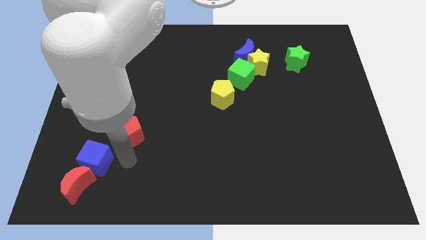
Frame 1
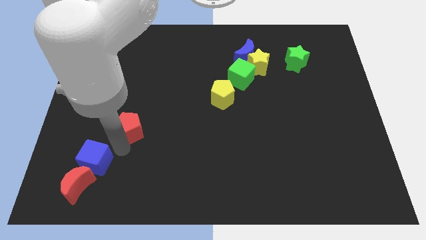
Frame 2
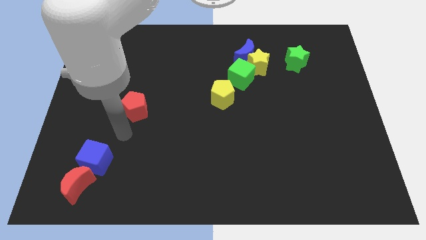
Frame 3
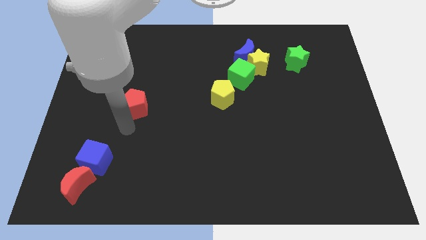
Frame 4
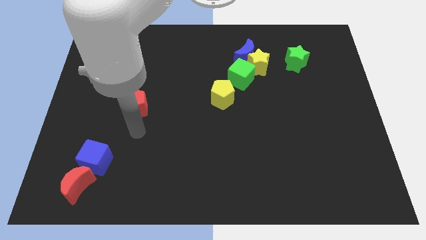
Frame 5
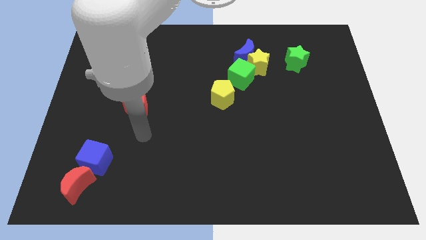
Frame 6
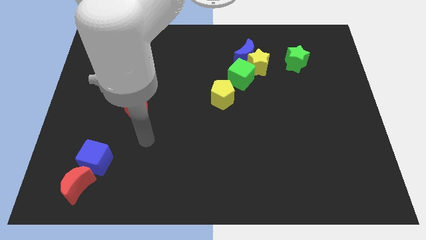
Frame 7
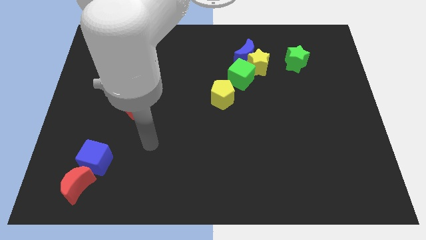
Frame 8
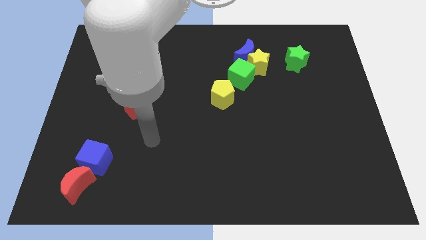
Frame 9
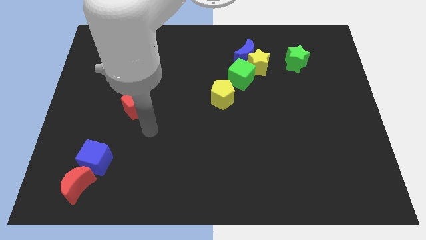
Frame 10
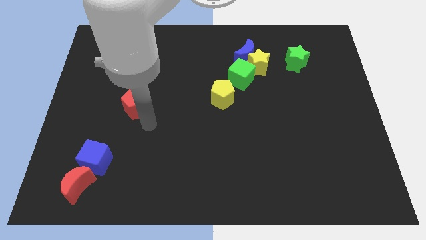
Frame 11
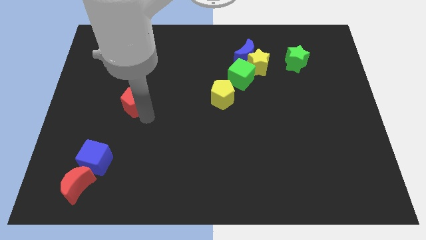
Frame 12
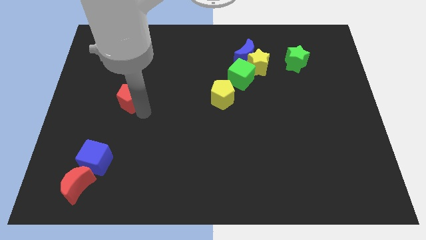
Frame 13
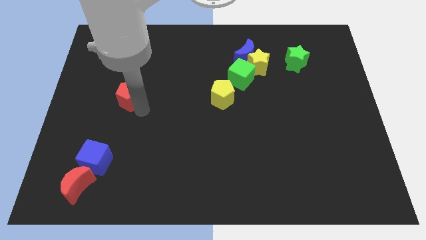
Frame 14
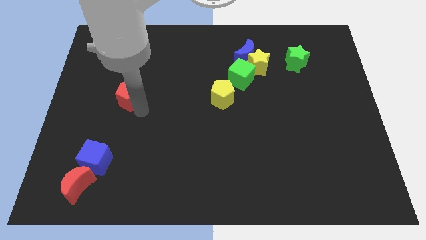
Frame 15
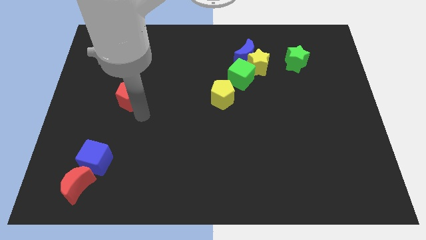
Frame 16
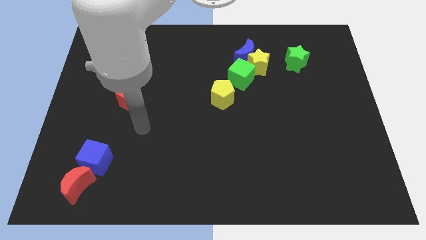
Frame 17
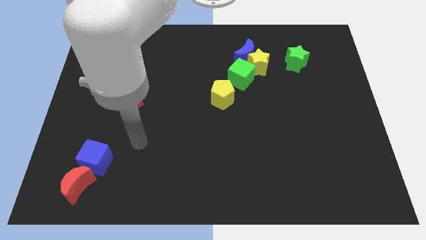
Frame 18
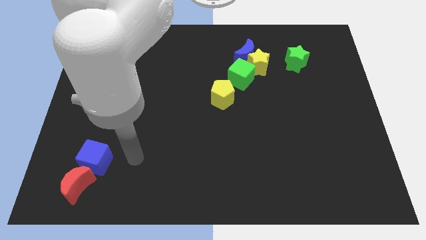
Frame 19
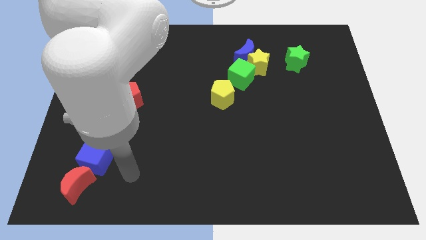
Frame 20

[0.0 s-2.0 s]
place red pentagon parallel to the yellow pentagon

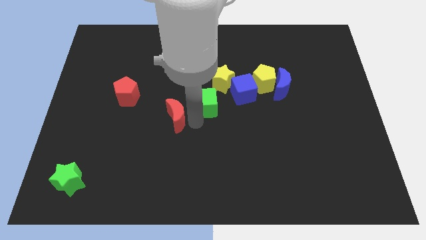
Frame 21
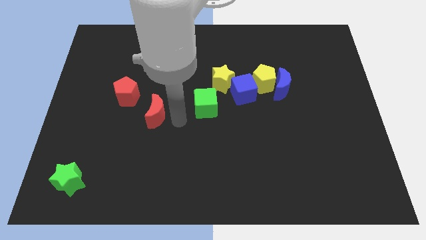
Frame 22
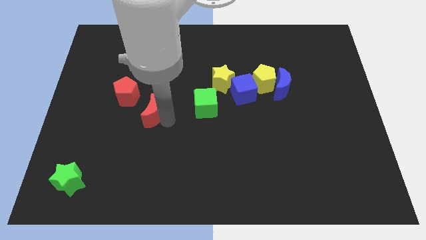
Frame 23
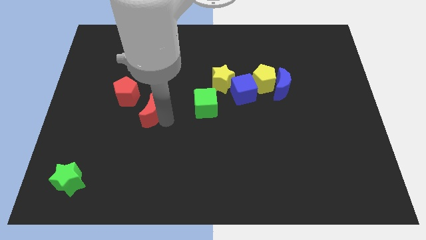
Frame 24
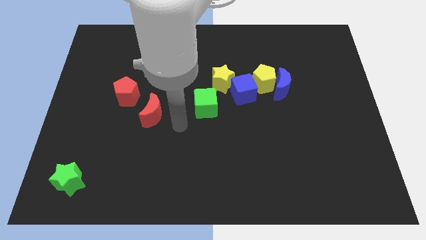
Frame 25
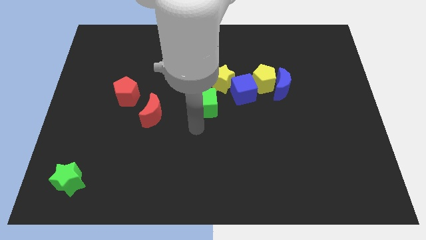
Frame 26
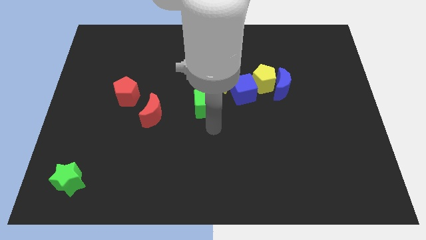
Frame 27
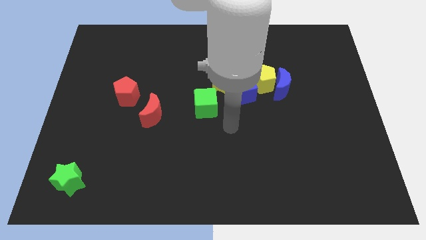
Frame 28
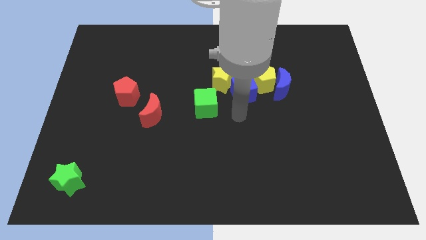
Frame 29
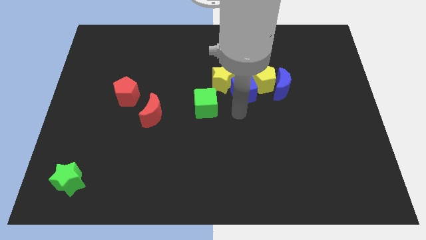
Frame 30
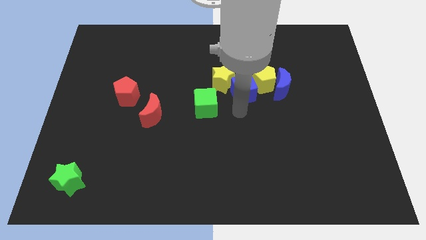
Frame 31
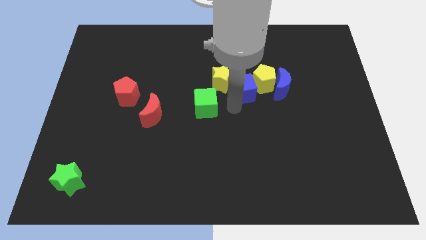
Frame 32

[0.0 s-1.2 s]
move red moon right below the red pentagon

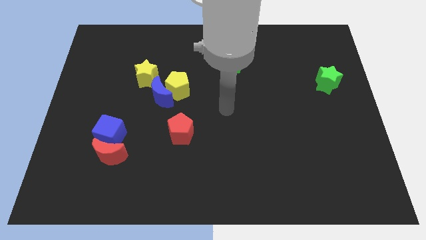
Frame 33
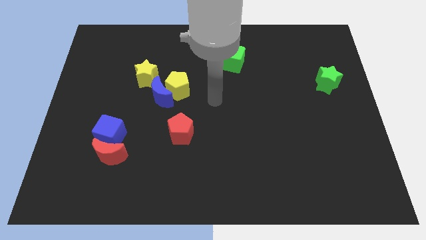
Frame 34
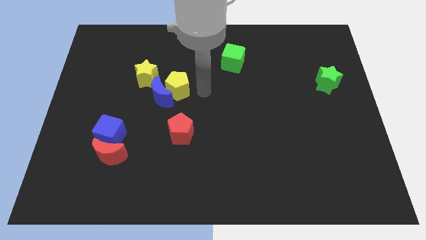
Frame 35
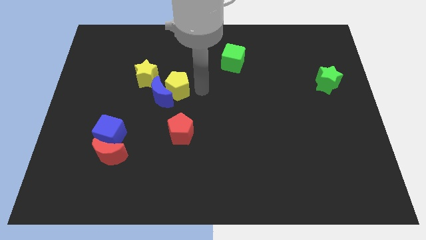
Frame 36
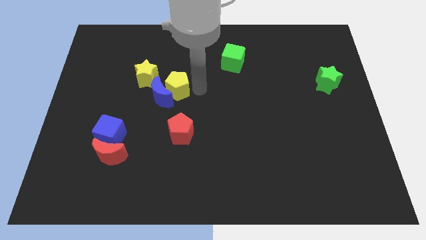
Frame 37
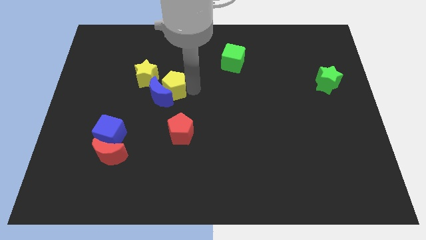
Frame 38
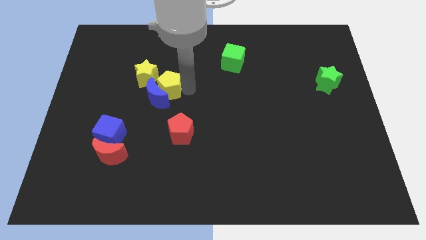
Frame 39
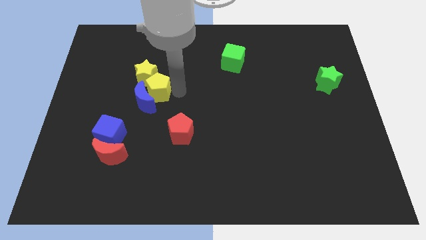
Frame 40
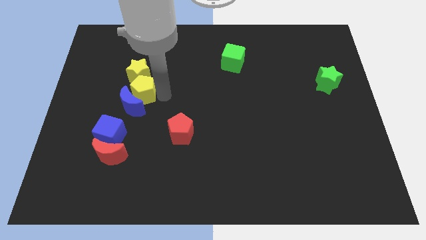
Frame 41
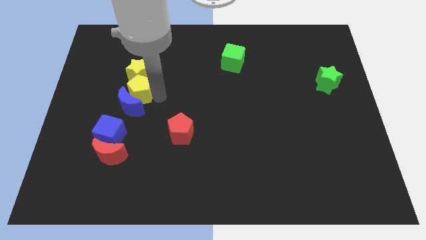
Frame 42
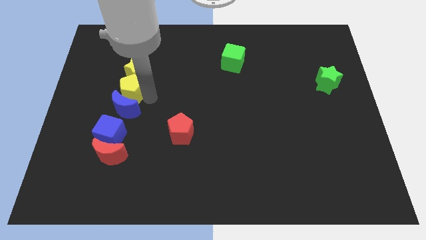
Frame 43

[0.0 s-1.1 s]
push yellow pentagon in to blue moon

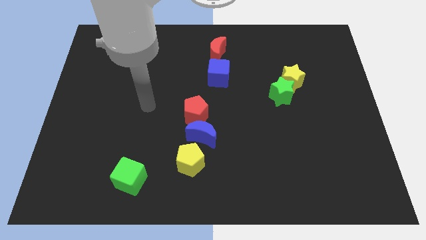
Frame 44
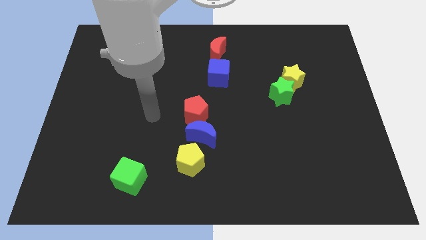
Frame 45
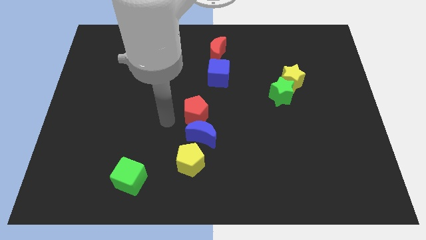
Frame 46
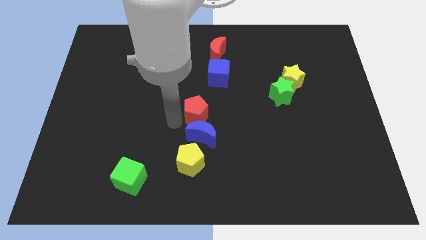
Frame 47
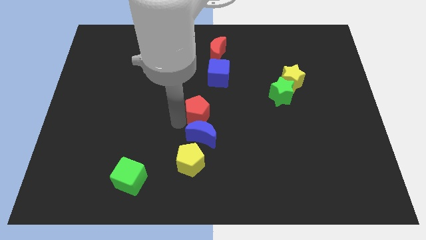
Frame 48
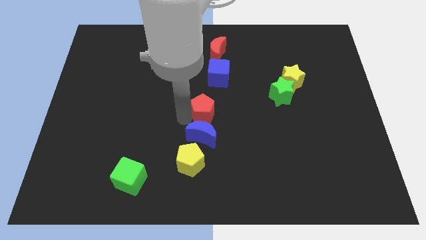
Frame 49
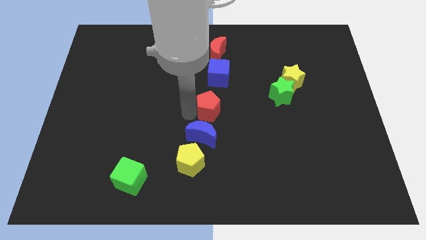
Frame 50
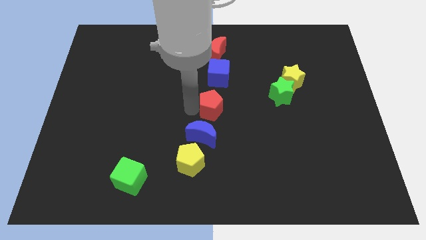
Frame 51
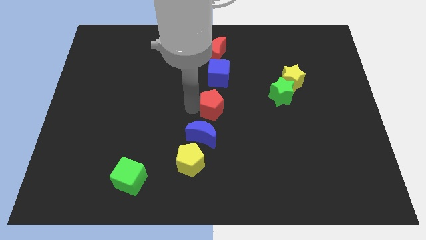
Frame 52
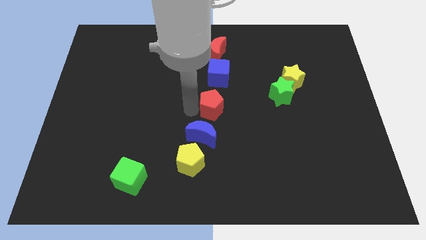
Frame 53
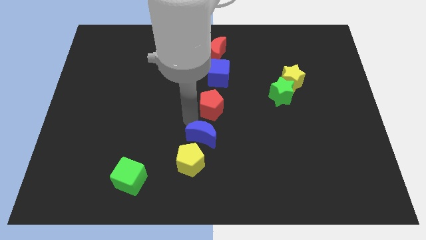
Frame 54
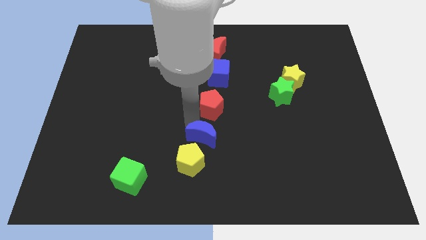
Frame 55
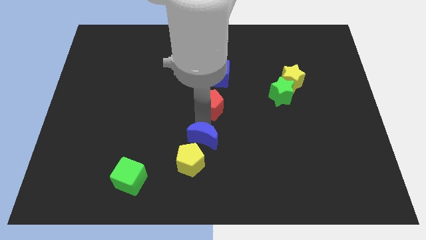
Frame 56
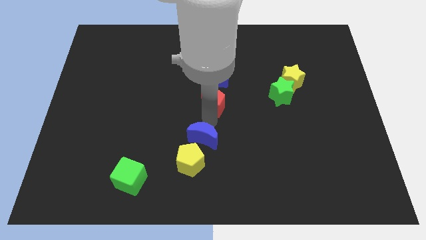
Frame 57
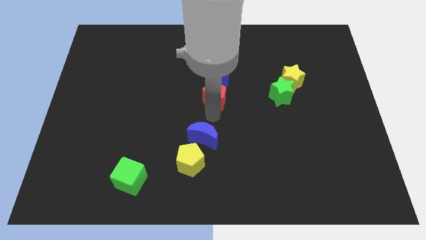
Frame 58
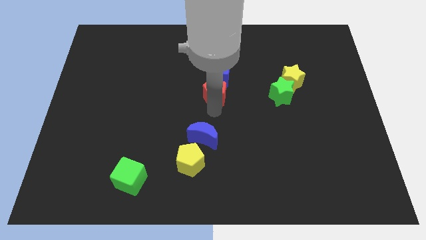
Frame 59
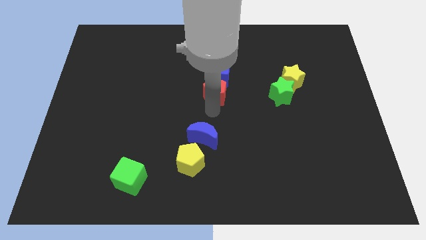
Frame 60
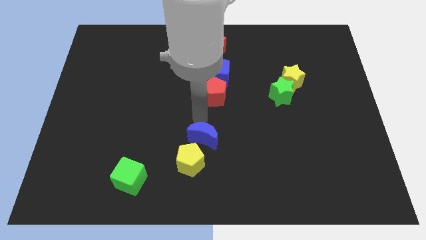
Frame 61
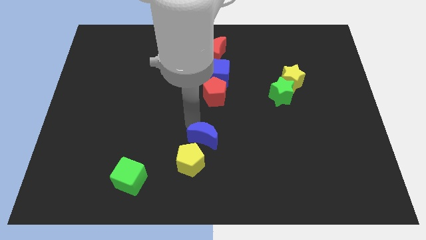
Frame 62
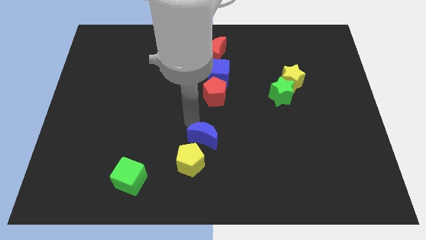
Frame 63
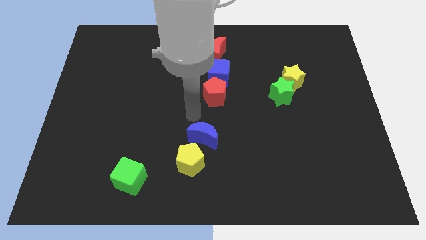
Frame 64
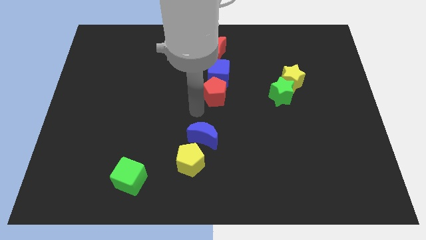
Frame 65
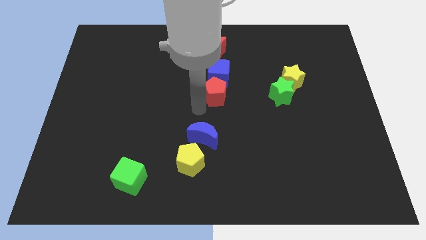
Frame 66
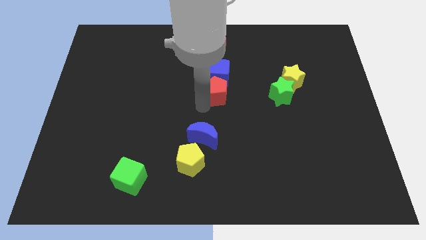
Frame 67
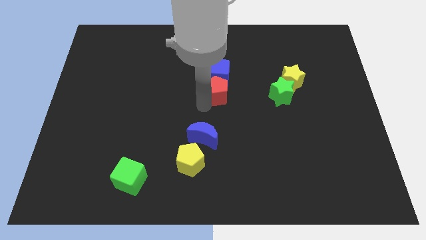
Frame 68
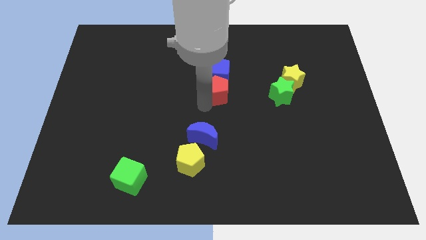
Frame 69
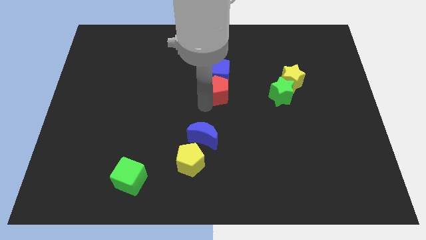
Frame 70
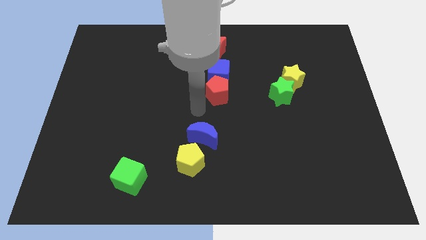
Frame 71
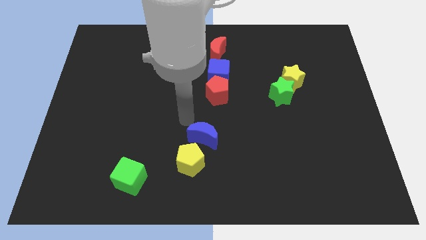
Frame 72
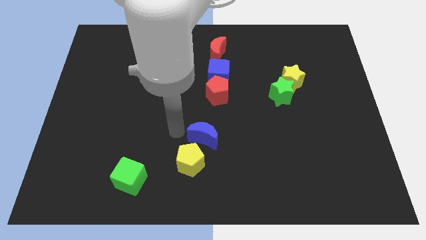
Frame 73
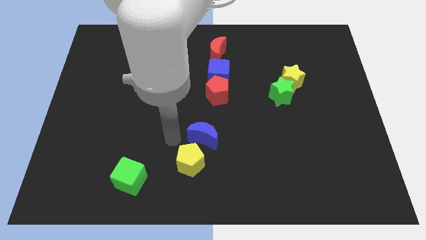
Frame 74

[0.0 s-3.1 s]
make the red pentagon to touch the bottom side of the blue cube

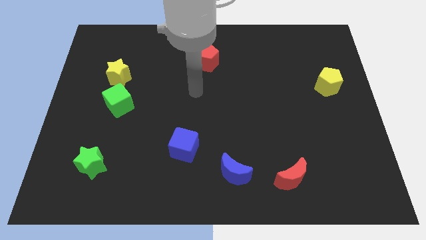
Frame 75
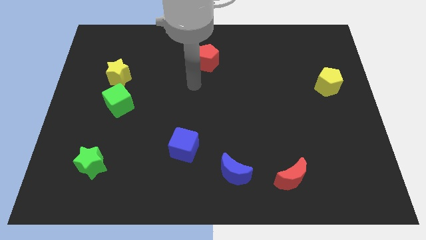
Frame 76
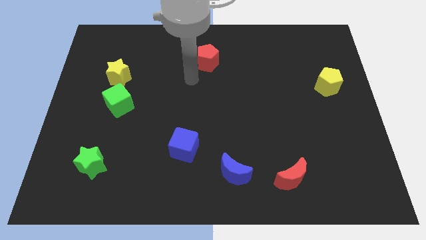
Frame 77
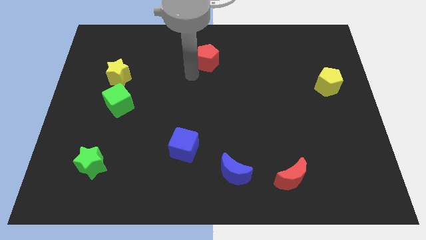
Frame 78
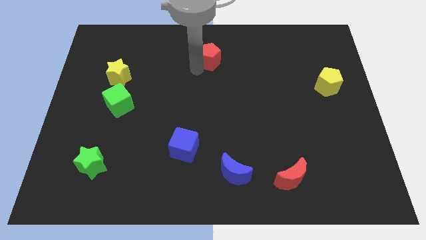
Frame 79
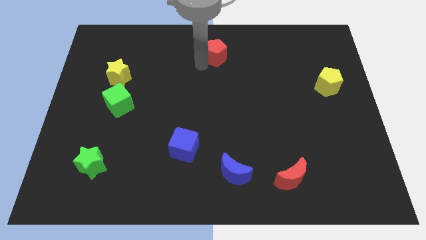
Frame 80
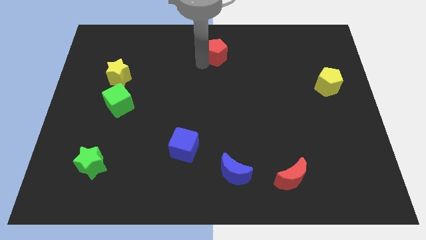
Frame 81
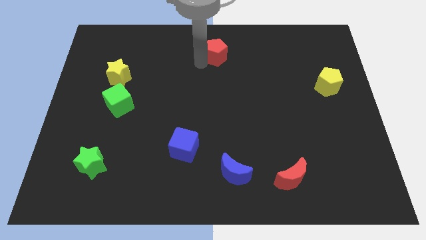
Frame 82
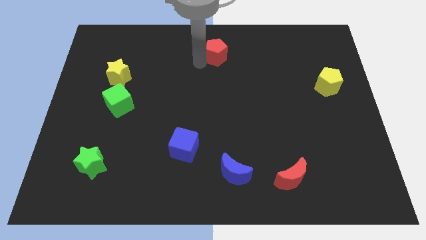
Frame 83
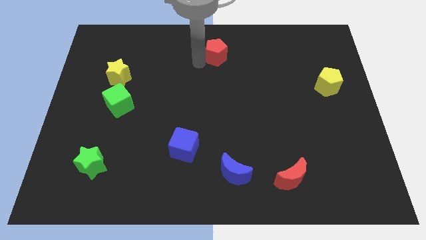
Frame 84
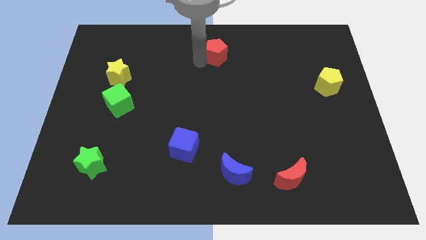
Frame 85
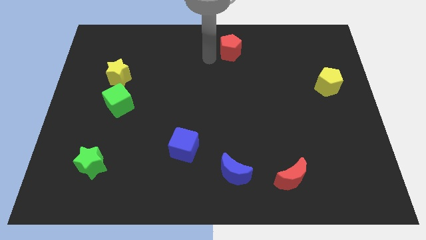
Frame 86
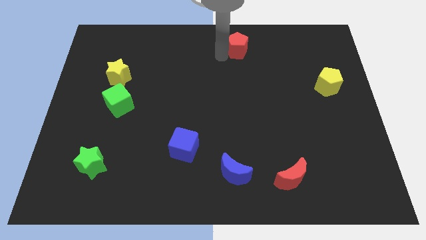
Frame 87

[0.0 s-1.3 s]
push the red pentagon vertically at the top of the blue crescent
